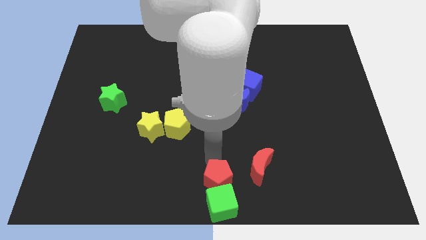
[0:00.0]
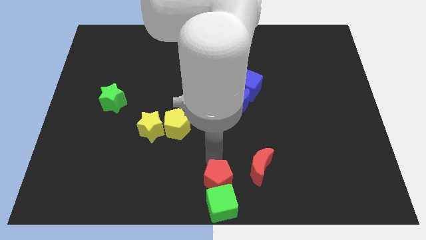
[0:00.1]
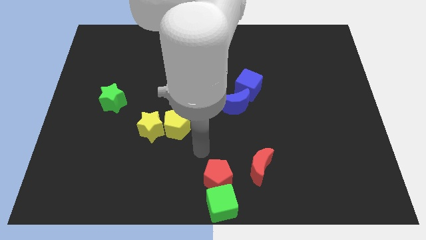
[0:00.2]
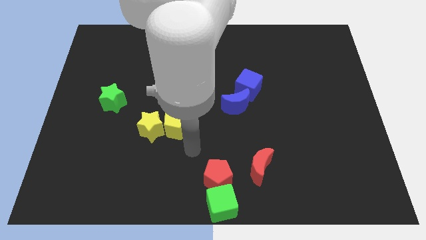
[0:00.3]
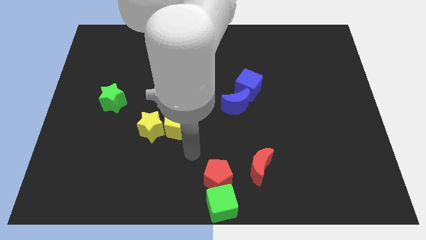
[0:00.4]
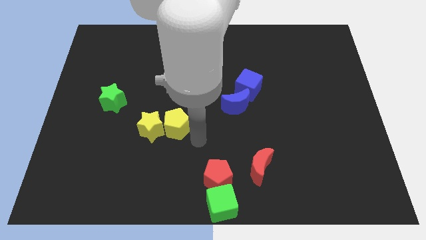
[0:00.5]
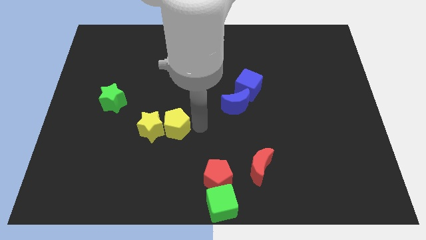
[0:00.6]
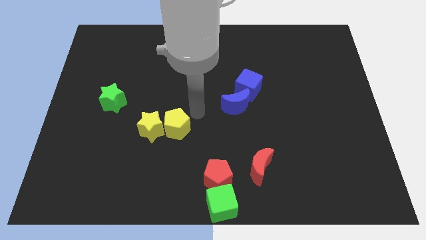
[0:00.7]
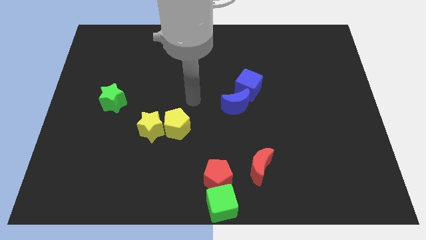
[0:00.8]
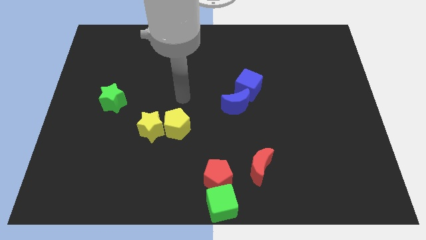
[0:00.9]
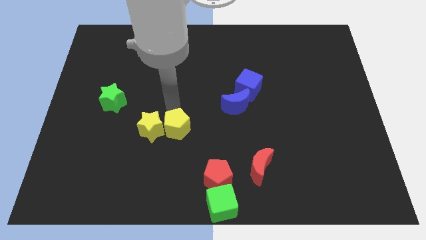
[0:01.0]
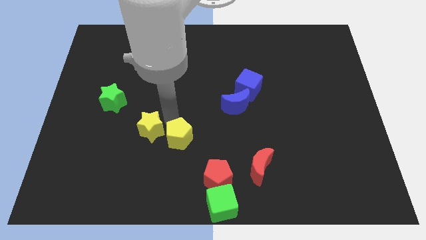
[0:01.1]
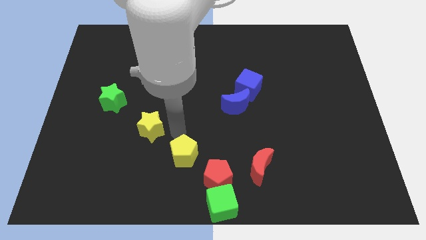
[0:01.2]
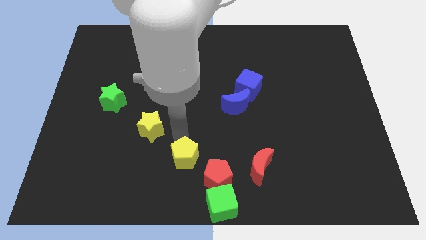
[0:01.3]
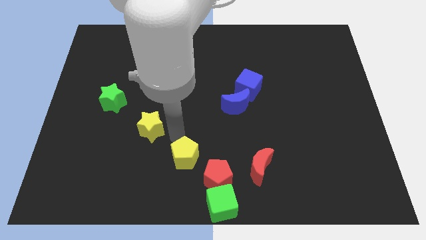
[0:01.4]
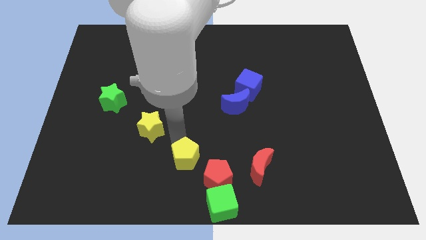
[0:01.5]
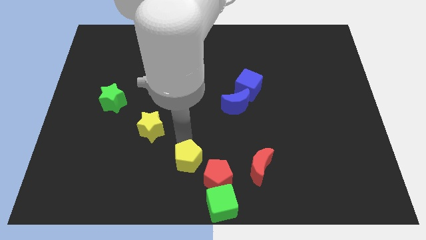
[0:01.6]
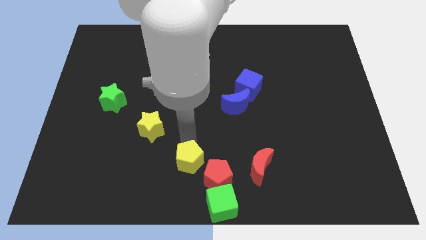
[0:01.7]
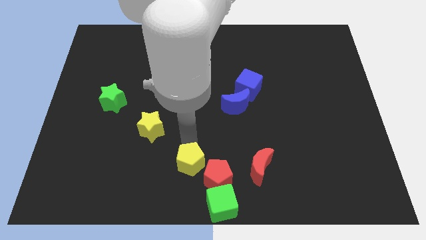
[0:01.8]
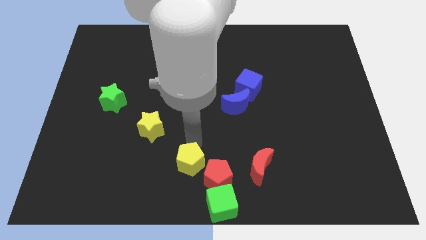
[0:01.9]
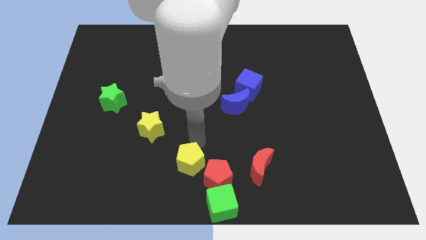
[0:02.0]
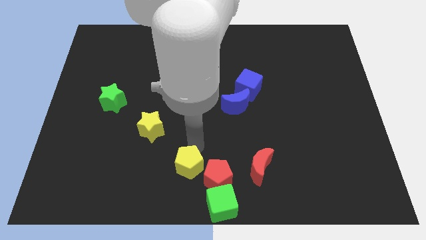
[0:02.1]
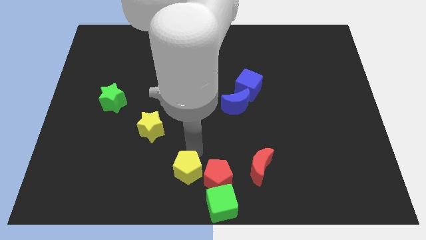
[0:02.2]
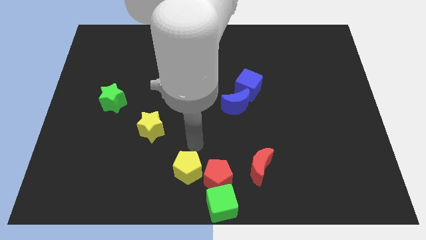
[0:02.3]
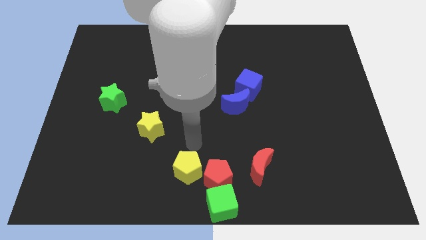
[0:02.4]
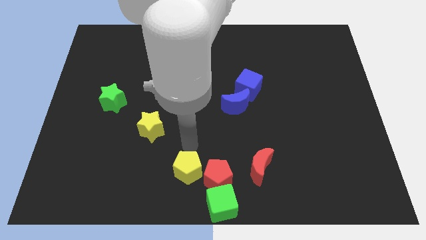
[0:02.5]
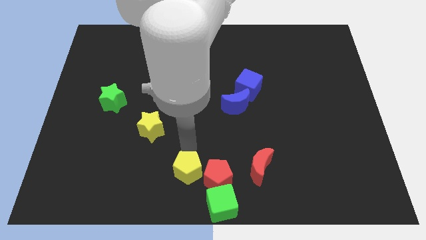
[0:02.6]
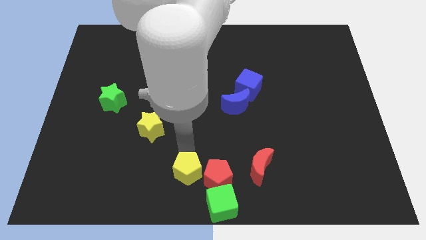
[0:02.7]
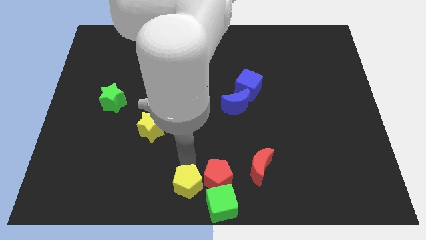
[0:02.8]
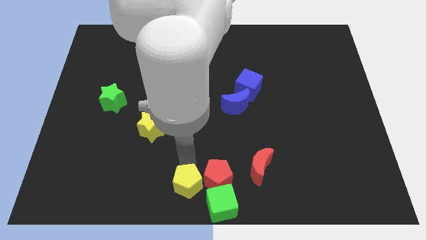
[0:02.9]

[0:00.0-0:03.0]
move the yellow pentagon to the left of the red pentagon

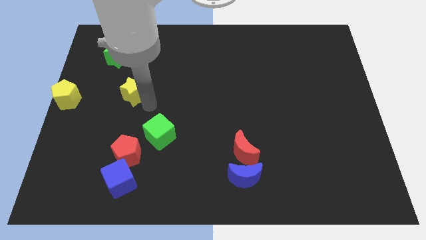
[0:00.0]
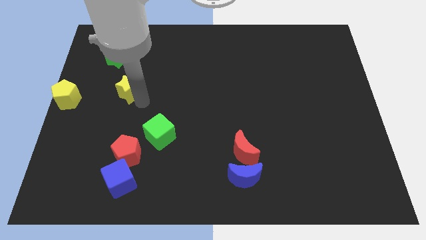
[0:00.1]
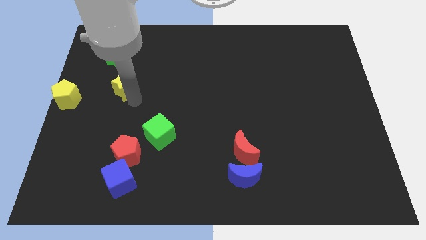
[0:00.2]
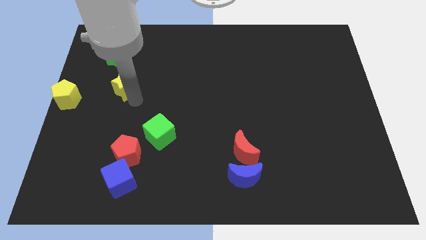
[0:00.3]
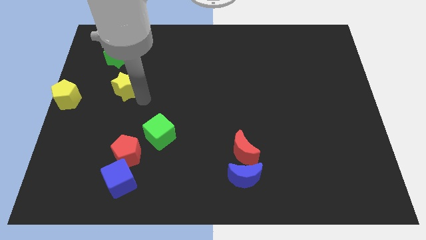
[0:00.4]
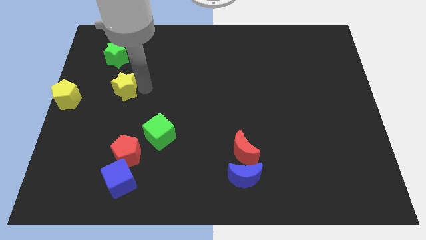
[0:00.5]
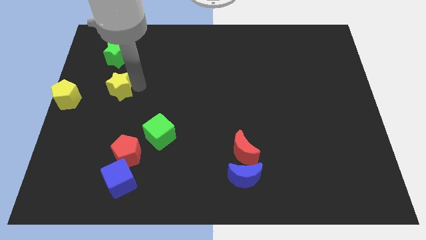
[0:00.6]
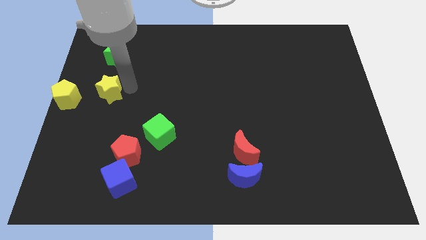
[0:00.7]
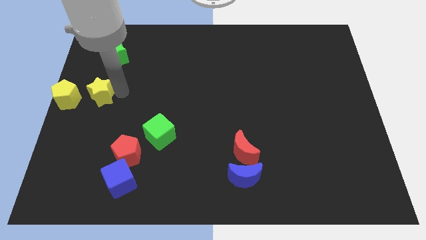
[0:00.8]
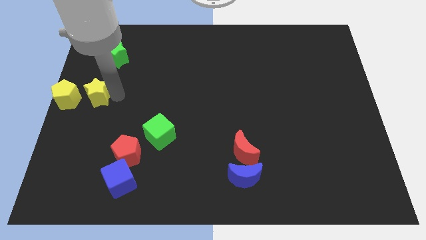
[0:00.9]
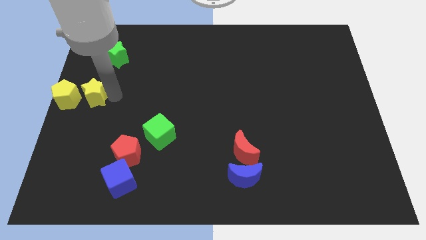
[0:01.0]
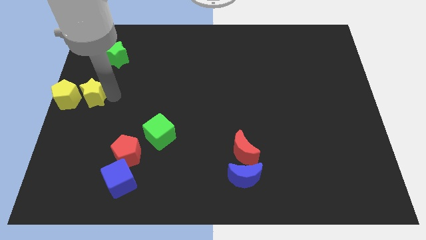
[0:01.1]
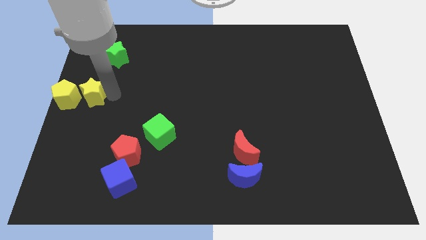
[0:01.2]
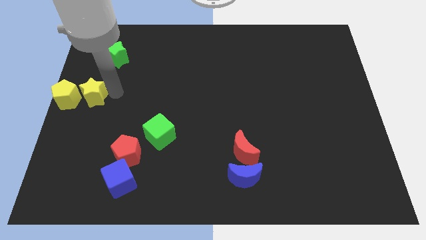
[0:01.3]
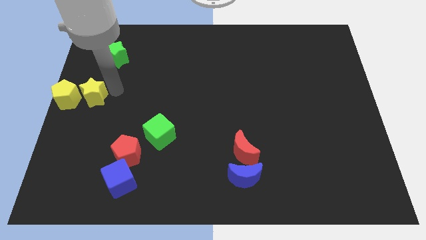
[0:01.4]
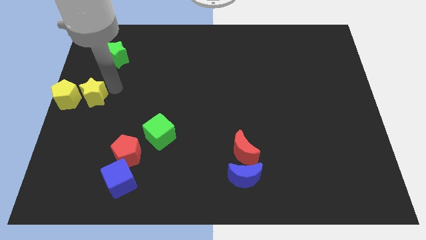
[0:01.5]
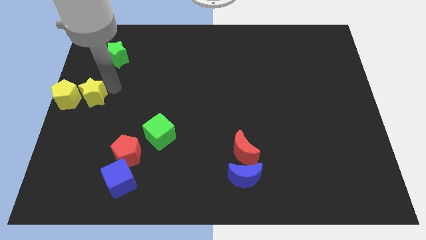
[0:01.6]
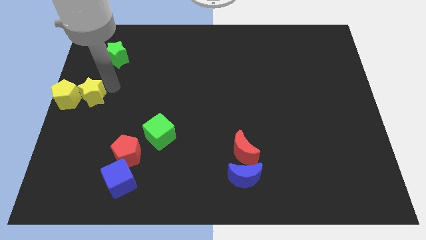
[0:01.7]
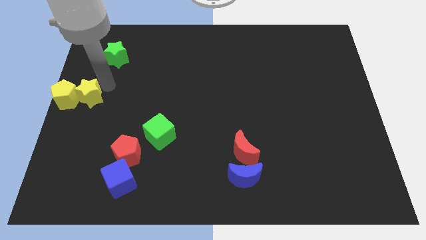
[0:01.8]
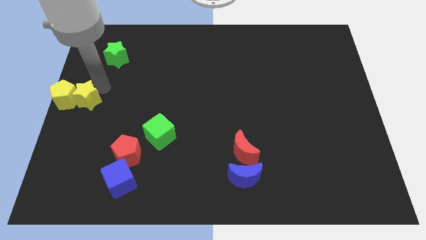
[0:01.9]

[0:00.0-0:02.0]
push yellow star into yellow pentagon

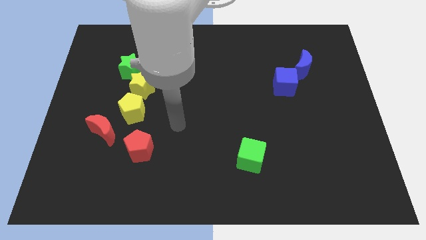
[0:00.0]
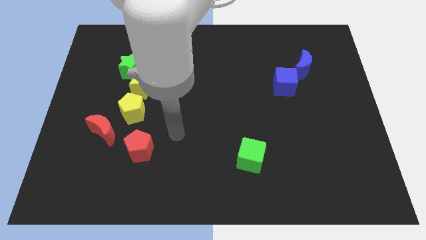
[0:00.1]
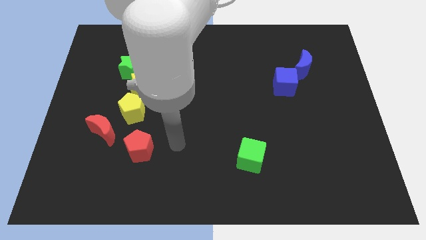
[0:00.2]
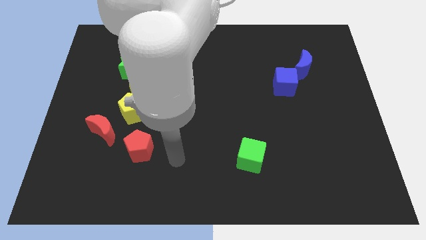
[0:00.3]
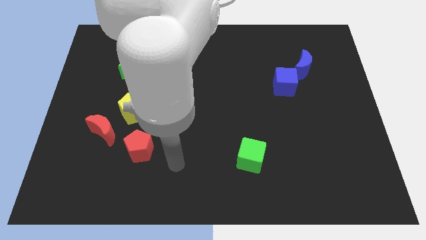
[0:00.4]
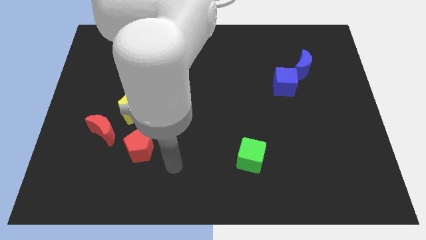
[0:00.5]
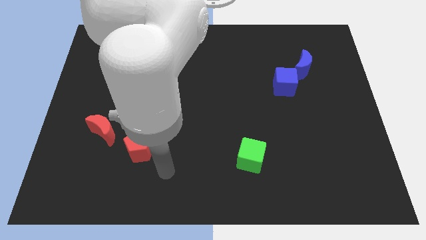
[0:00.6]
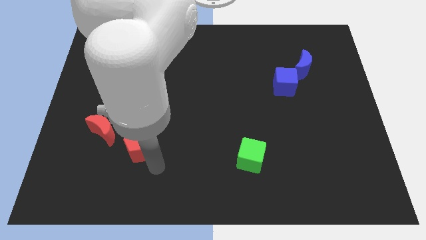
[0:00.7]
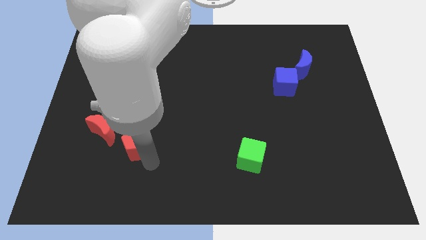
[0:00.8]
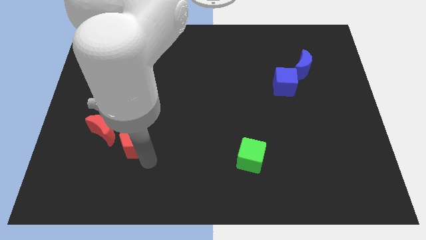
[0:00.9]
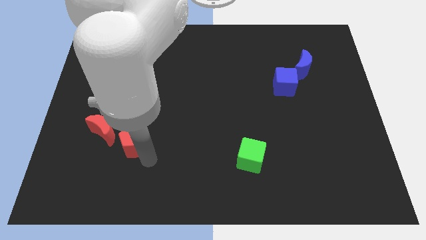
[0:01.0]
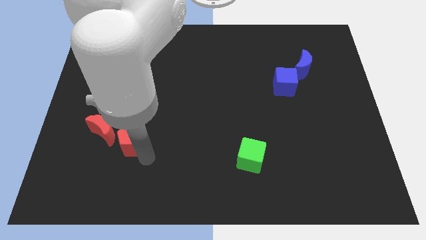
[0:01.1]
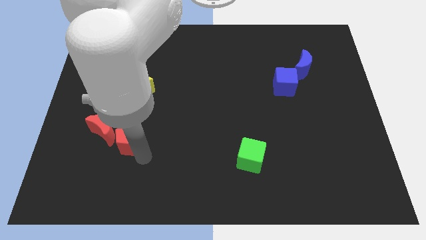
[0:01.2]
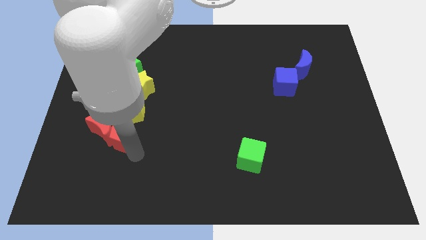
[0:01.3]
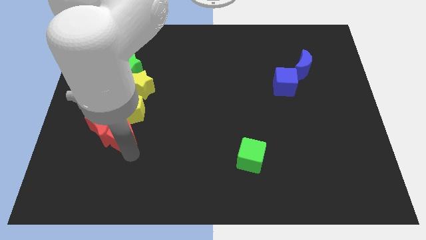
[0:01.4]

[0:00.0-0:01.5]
push the red pentagon towards the red crescent

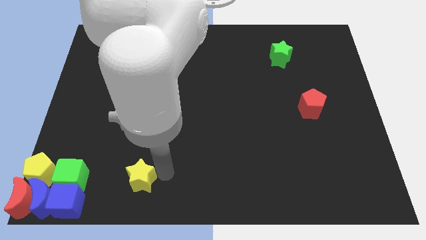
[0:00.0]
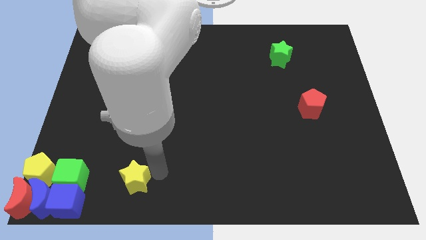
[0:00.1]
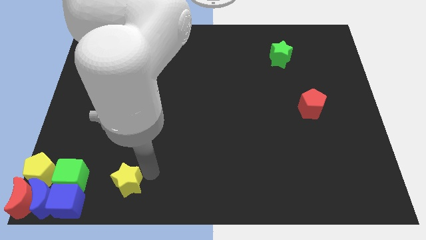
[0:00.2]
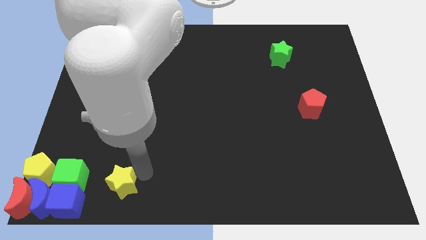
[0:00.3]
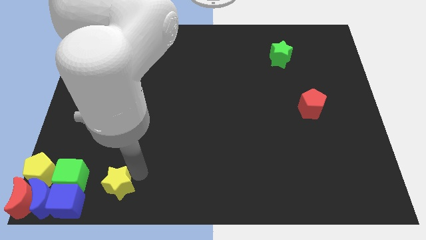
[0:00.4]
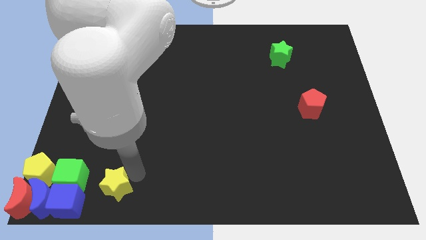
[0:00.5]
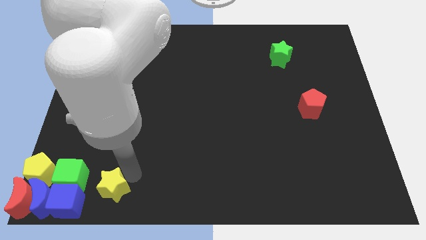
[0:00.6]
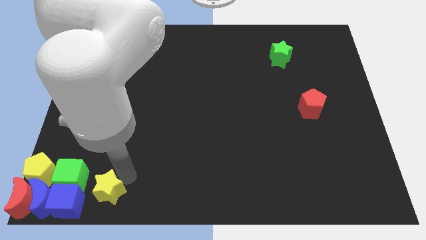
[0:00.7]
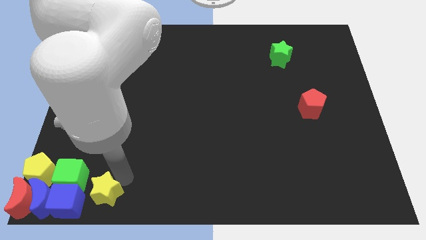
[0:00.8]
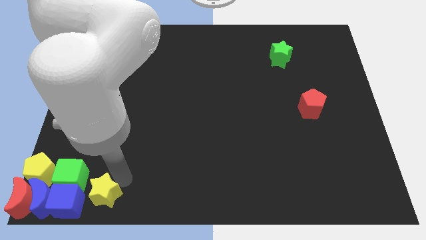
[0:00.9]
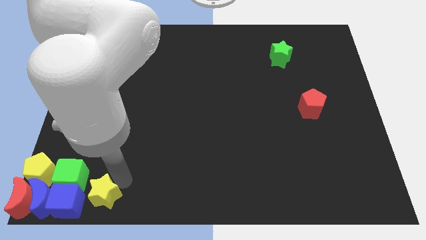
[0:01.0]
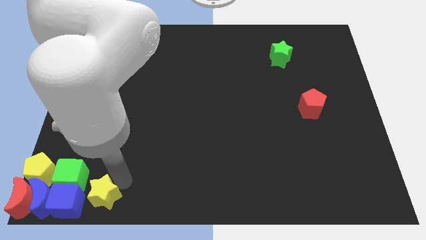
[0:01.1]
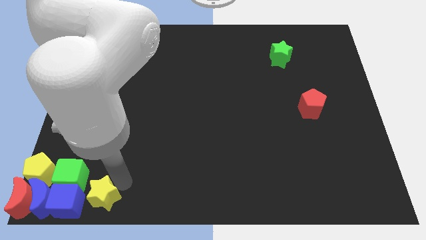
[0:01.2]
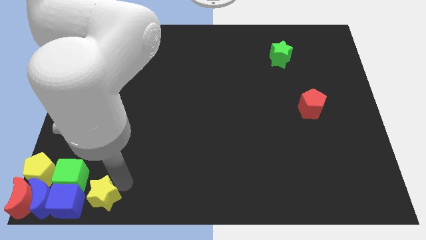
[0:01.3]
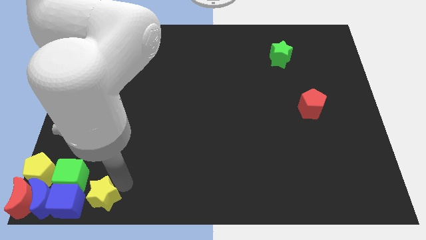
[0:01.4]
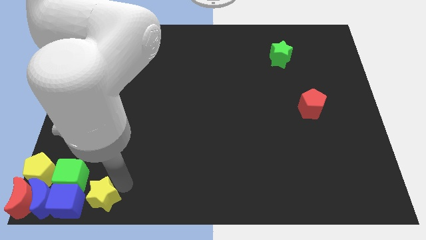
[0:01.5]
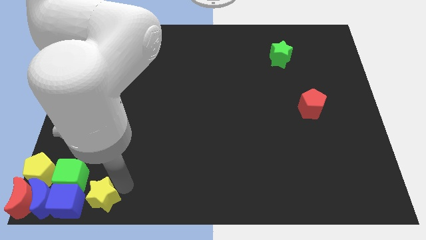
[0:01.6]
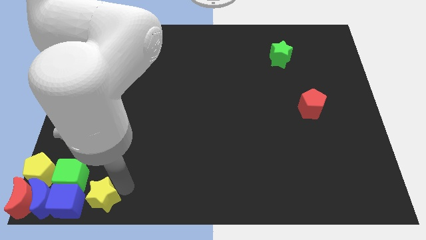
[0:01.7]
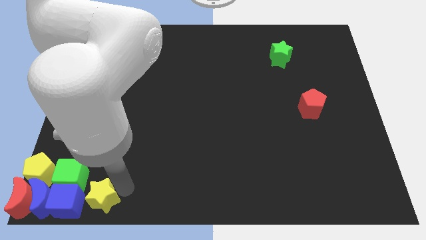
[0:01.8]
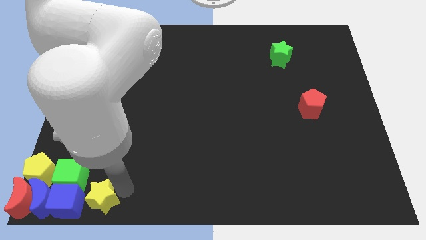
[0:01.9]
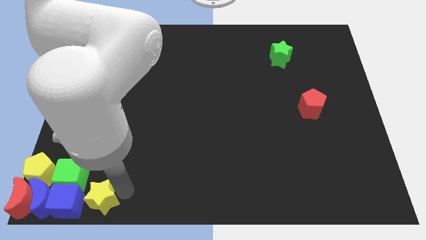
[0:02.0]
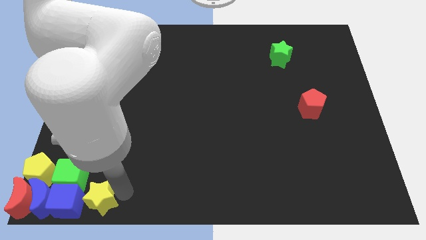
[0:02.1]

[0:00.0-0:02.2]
place the yellow star to the right side of the blue cube

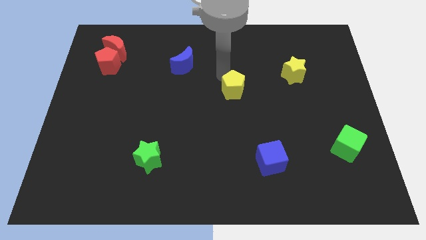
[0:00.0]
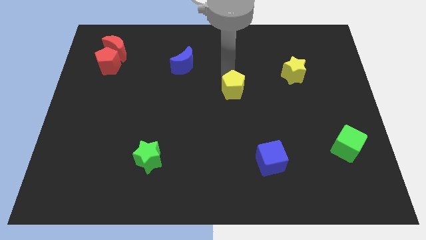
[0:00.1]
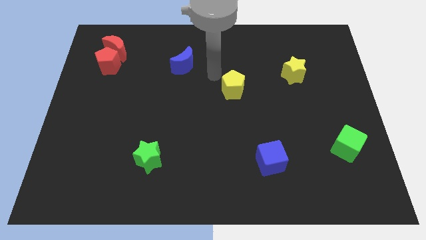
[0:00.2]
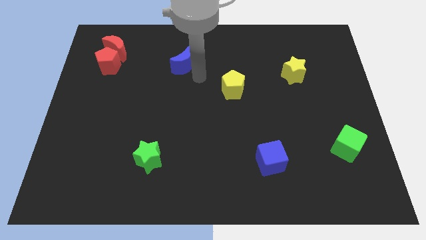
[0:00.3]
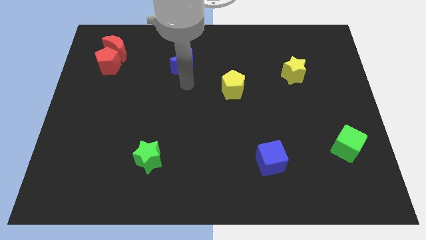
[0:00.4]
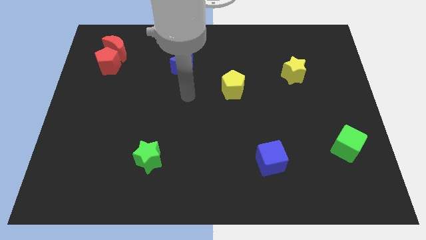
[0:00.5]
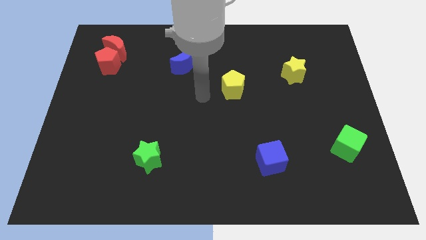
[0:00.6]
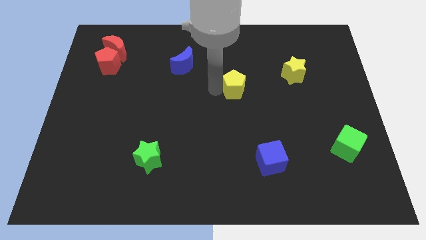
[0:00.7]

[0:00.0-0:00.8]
point your arm at the left of the yellow pentagon
